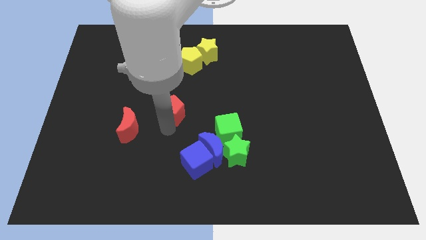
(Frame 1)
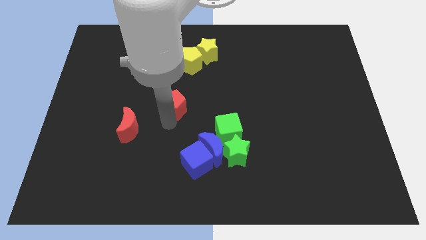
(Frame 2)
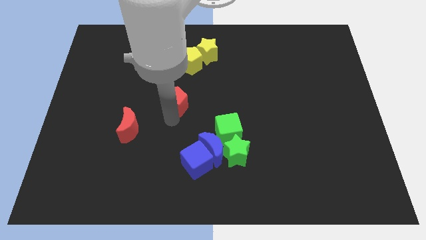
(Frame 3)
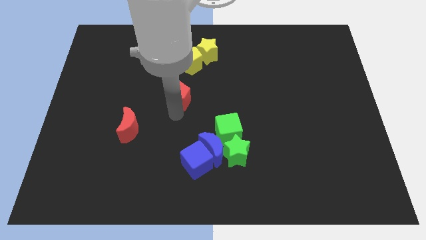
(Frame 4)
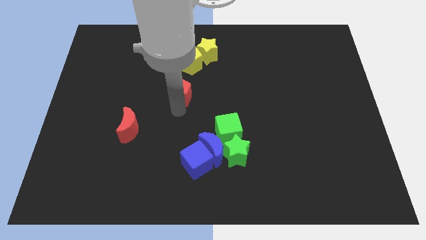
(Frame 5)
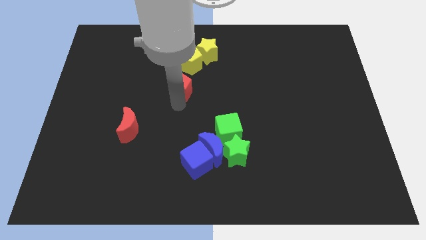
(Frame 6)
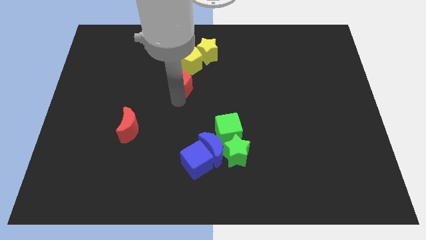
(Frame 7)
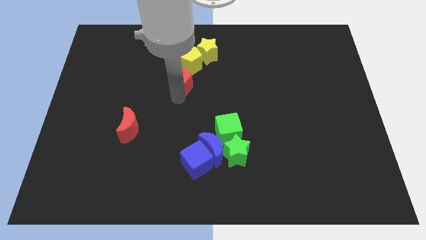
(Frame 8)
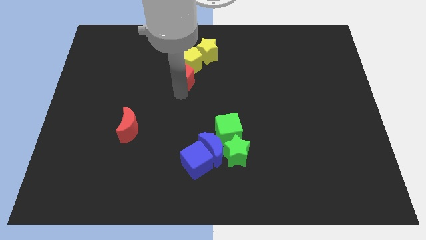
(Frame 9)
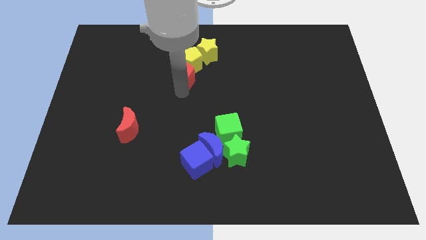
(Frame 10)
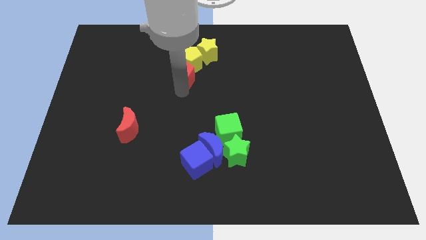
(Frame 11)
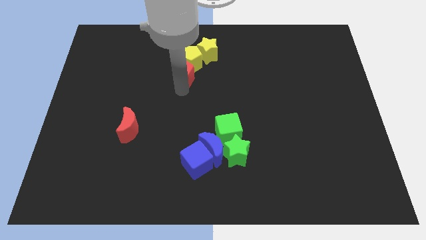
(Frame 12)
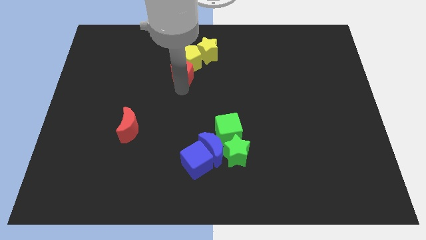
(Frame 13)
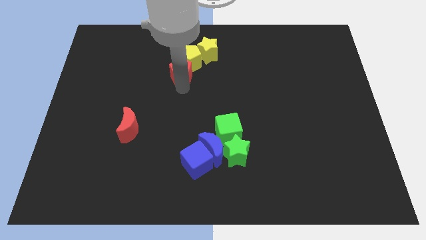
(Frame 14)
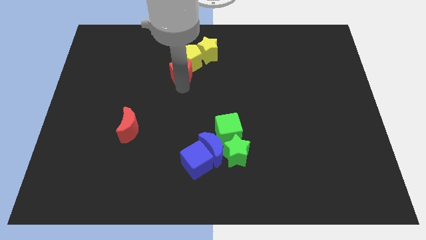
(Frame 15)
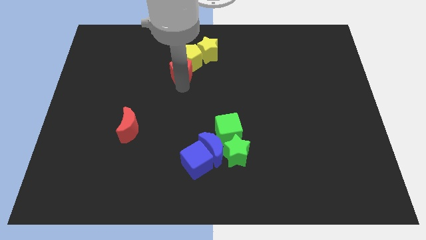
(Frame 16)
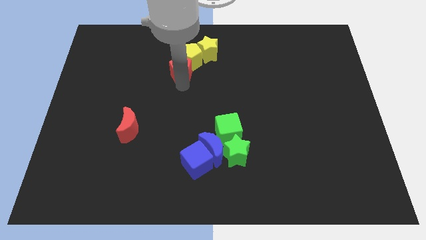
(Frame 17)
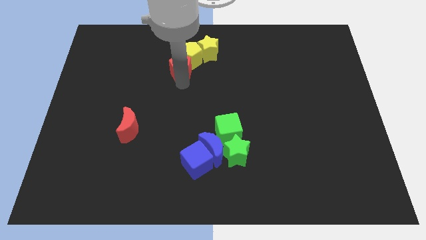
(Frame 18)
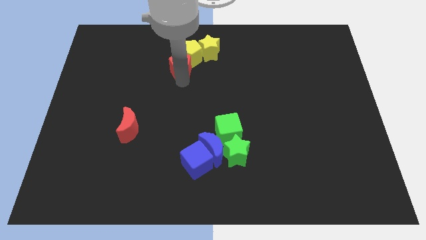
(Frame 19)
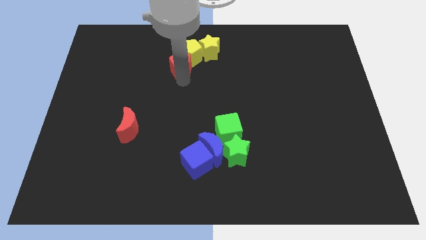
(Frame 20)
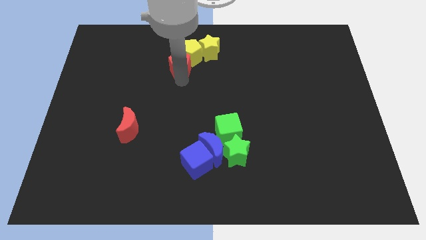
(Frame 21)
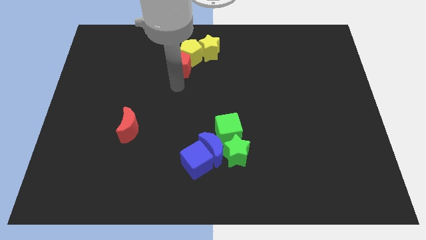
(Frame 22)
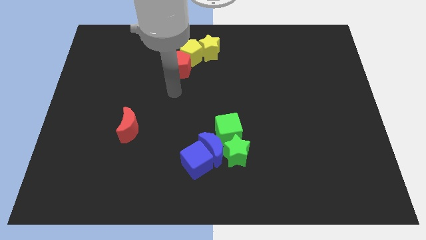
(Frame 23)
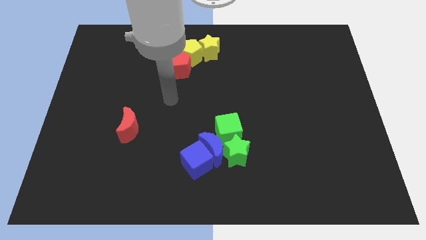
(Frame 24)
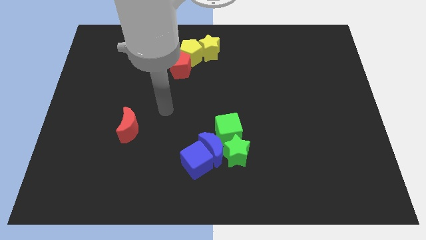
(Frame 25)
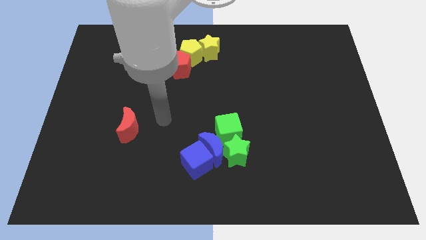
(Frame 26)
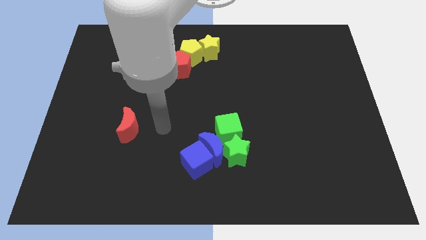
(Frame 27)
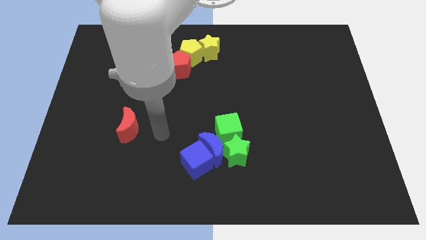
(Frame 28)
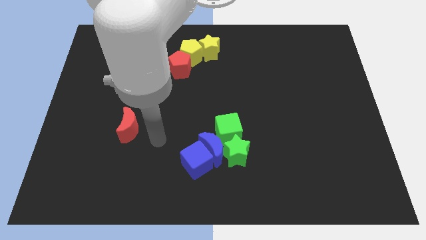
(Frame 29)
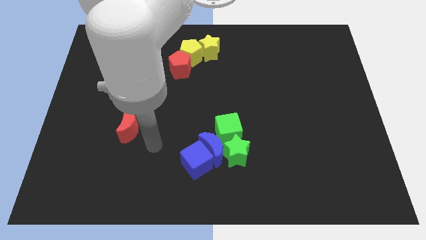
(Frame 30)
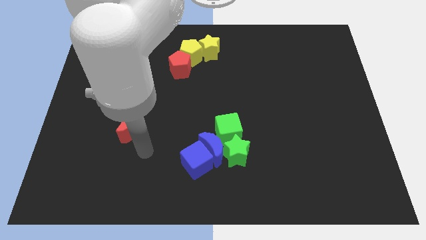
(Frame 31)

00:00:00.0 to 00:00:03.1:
move your arm towards the bottom

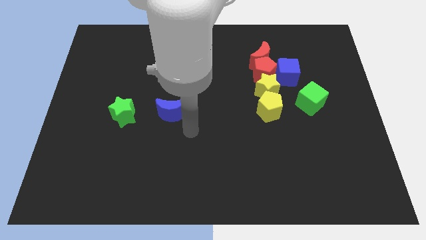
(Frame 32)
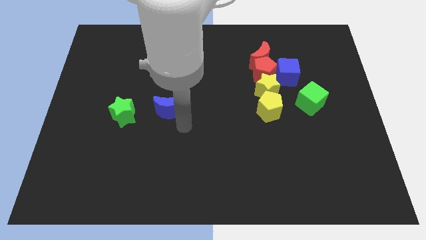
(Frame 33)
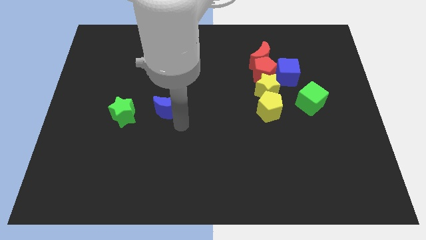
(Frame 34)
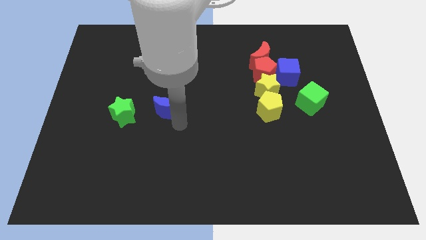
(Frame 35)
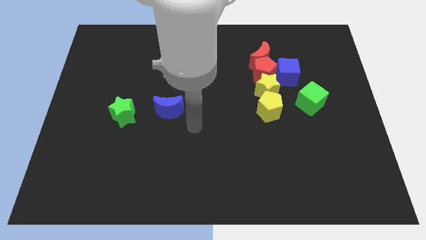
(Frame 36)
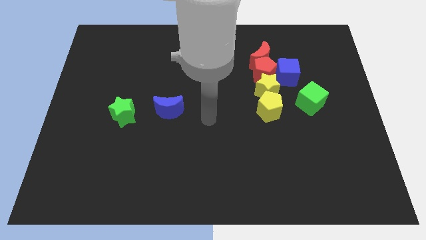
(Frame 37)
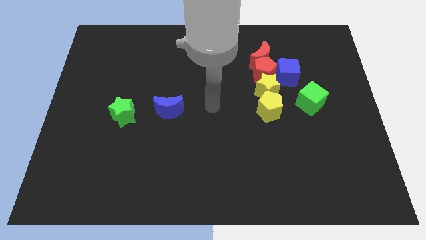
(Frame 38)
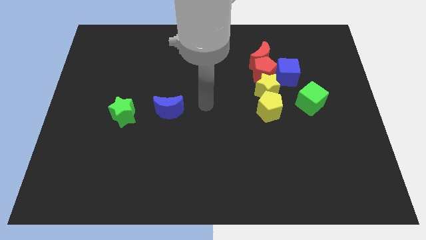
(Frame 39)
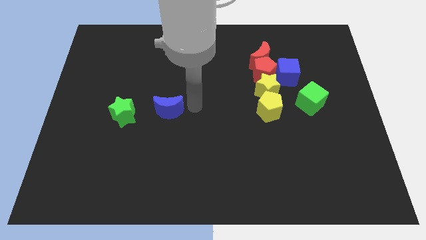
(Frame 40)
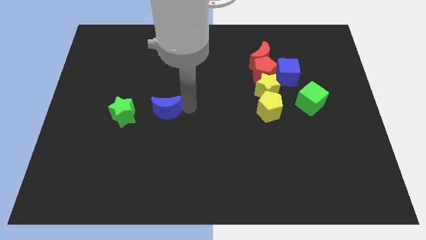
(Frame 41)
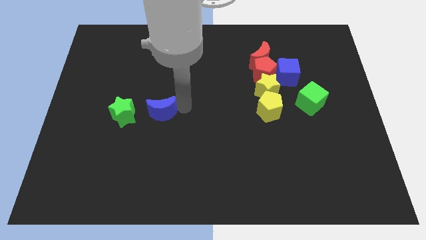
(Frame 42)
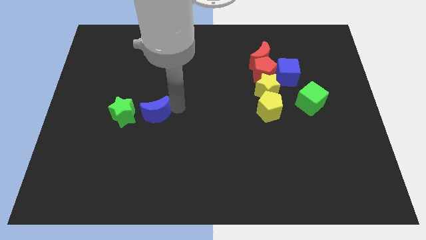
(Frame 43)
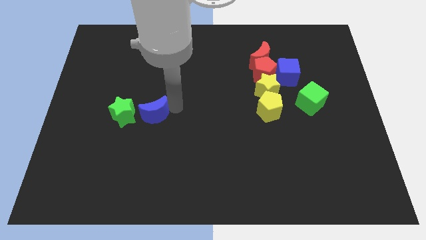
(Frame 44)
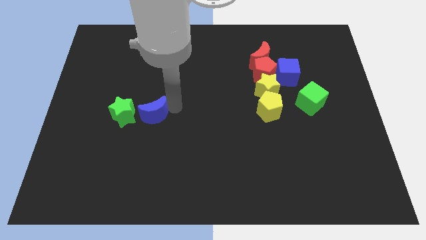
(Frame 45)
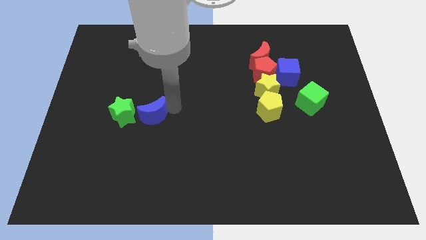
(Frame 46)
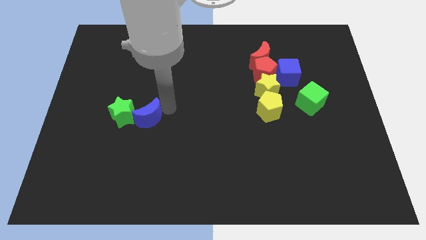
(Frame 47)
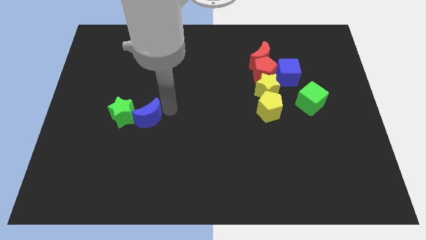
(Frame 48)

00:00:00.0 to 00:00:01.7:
move the blue moon close to the green star

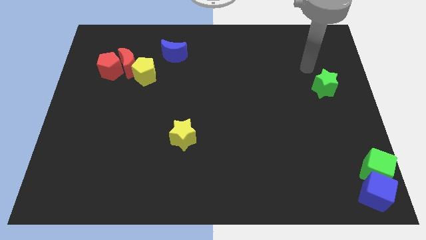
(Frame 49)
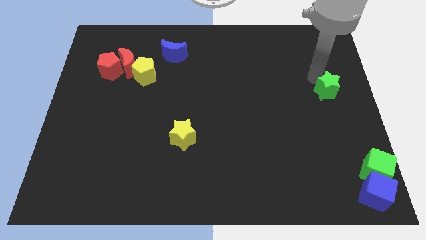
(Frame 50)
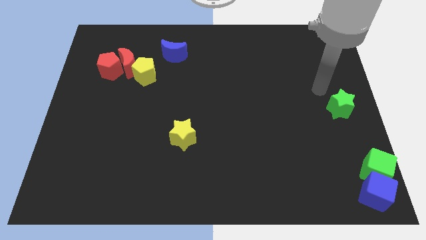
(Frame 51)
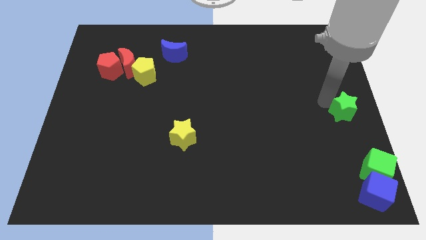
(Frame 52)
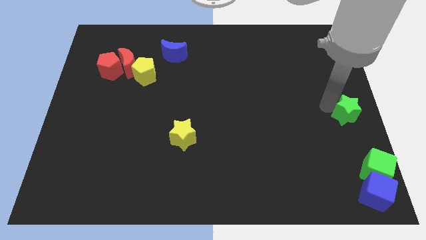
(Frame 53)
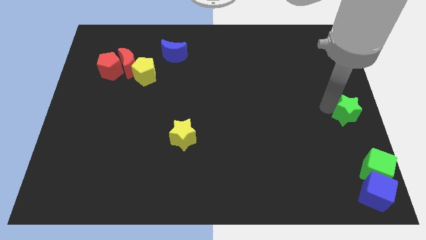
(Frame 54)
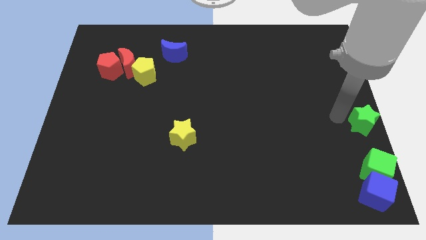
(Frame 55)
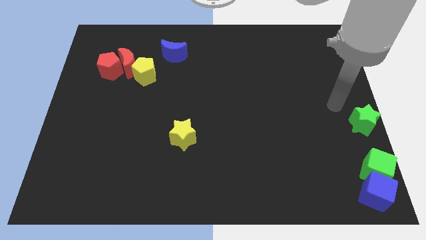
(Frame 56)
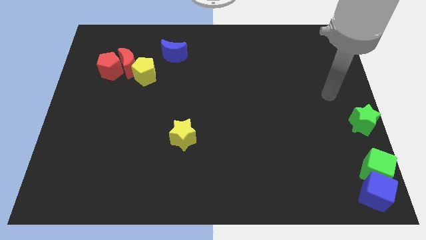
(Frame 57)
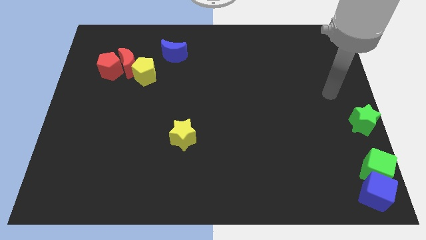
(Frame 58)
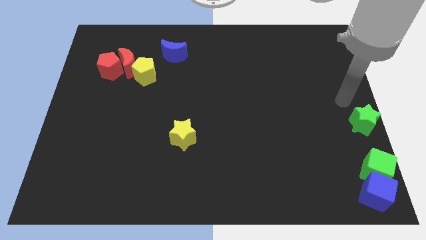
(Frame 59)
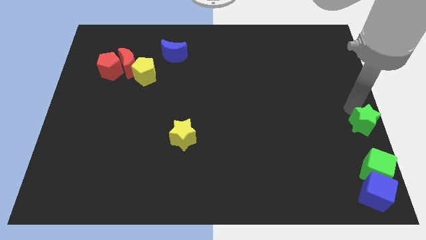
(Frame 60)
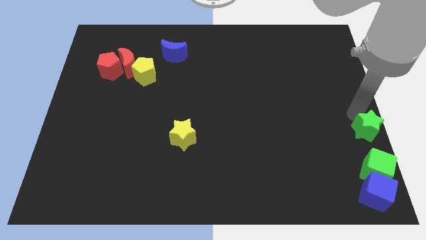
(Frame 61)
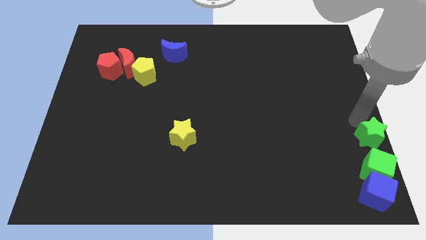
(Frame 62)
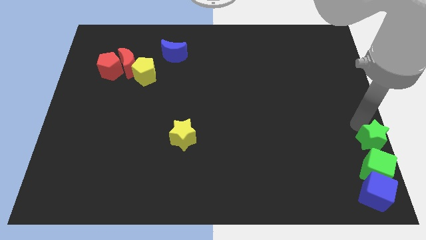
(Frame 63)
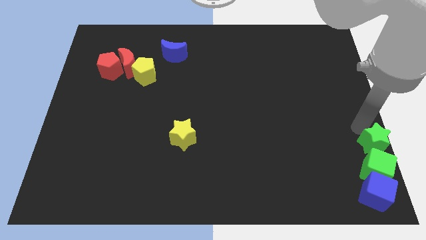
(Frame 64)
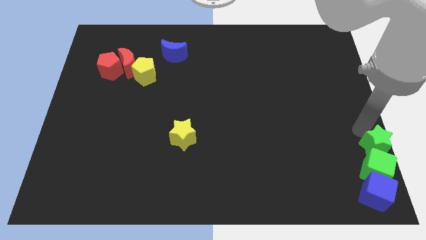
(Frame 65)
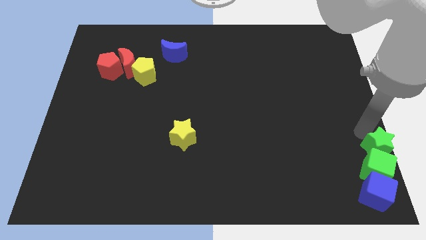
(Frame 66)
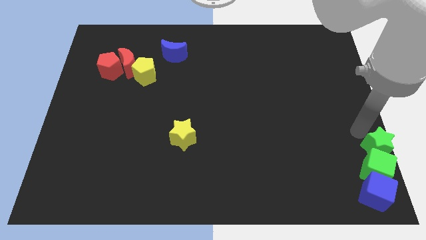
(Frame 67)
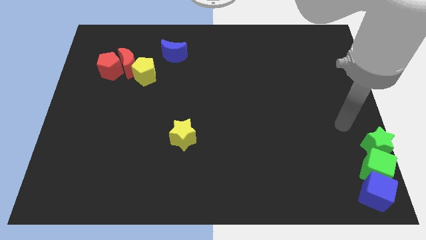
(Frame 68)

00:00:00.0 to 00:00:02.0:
move the green star at the top of the green cube

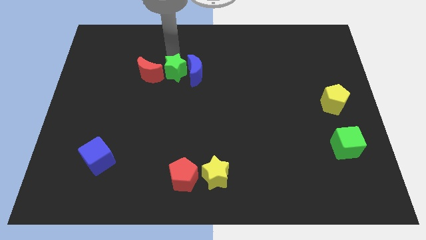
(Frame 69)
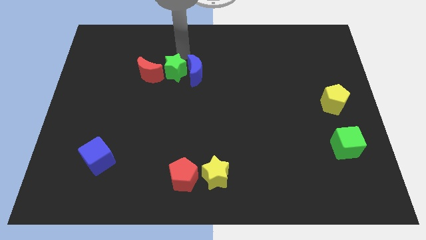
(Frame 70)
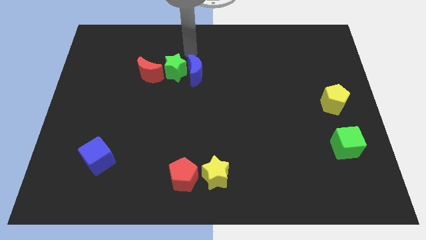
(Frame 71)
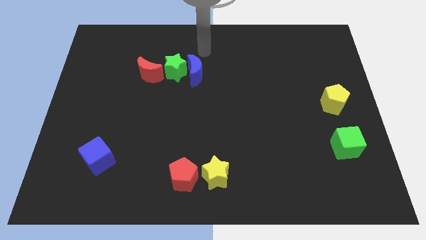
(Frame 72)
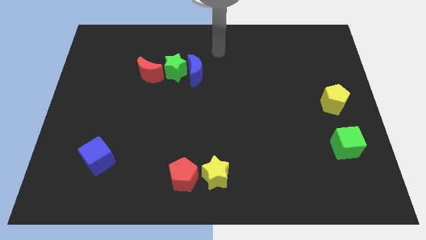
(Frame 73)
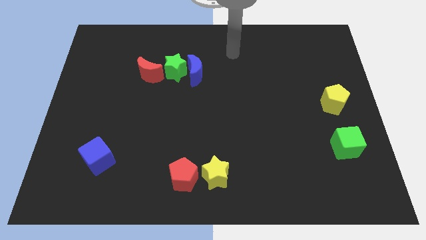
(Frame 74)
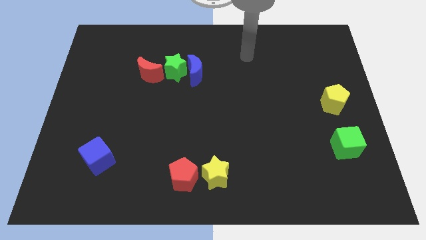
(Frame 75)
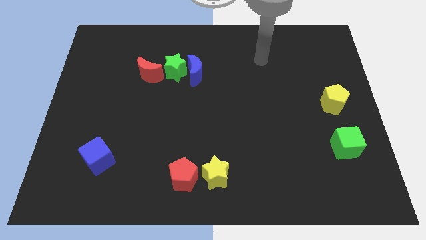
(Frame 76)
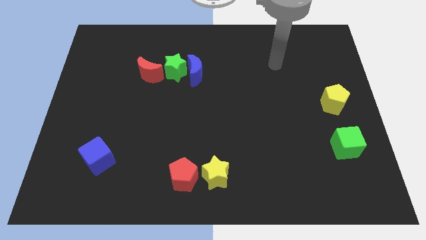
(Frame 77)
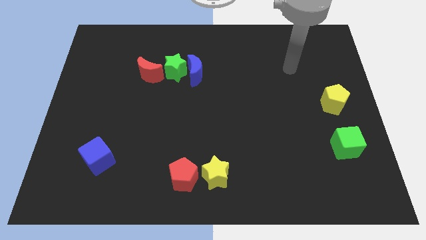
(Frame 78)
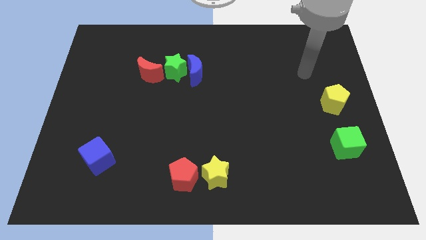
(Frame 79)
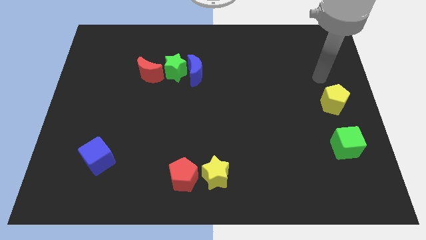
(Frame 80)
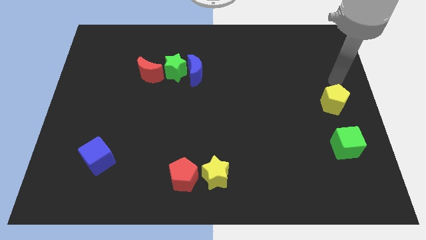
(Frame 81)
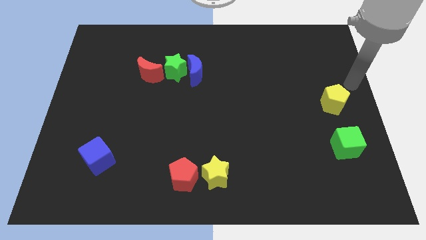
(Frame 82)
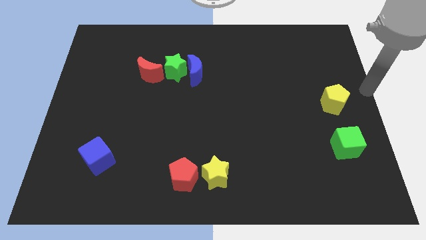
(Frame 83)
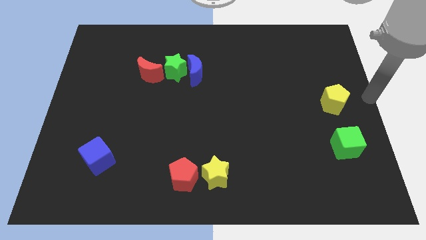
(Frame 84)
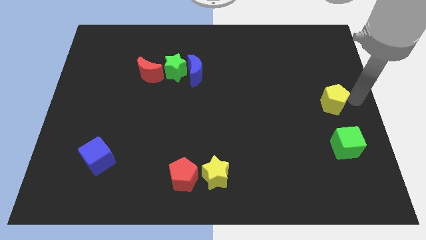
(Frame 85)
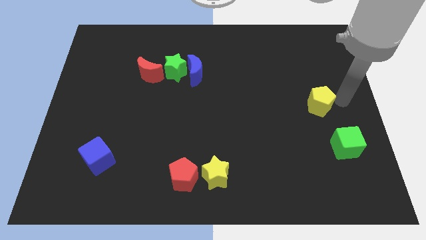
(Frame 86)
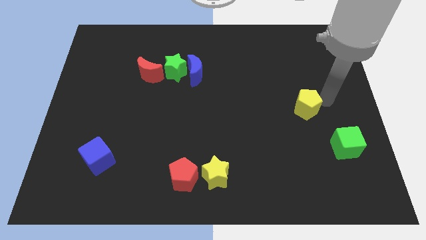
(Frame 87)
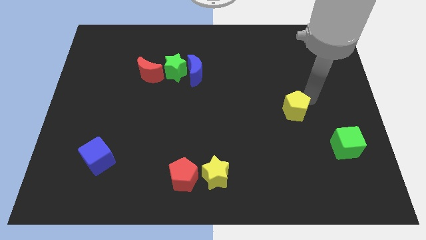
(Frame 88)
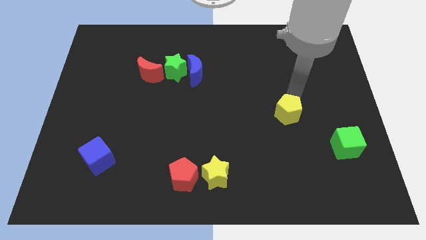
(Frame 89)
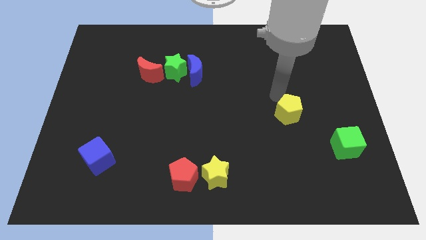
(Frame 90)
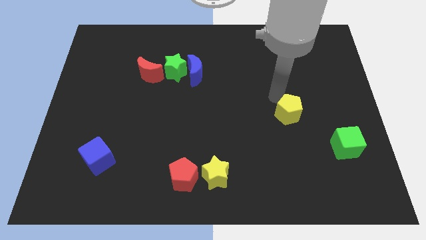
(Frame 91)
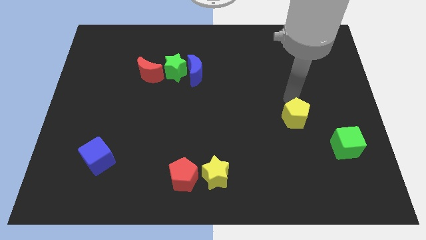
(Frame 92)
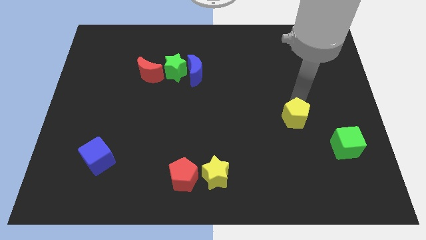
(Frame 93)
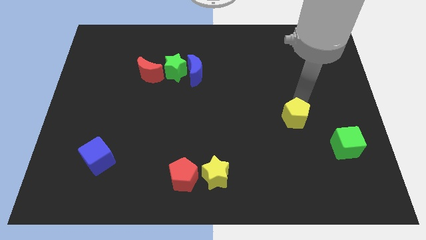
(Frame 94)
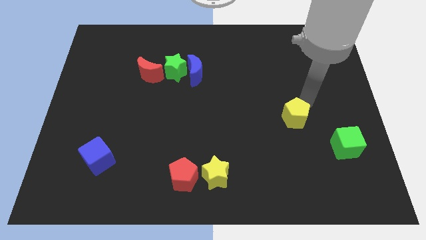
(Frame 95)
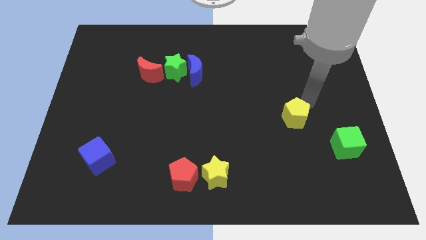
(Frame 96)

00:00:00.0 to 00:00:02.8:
place the yellow pentagon to the top left side of the green cube
